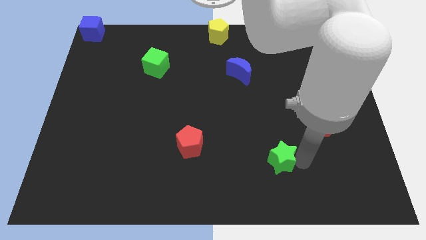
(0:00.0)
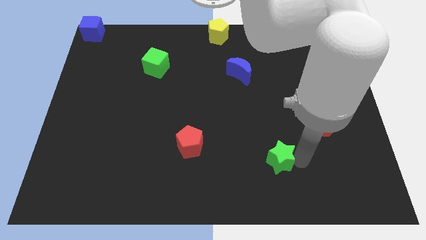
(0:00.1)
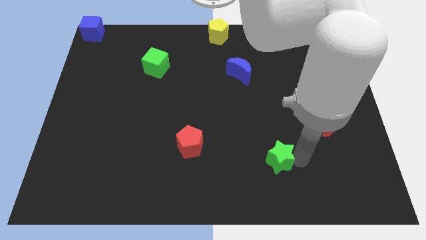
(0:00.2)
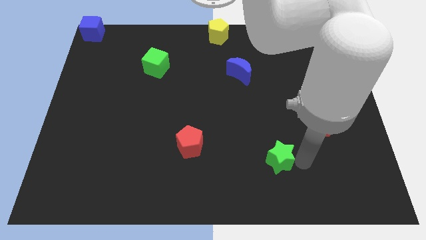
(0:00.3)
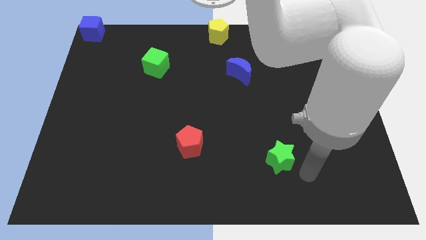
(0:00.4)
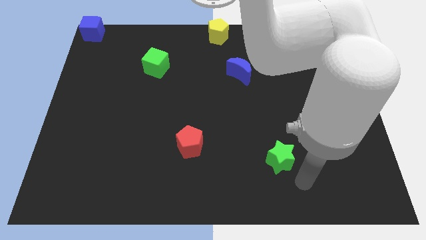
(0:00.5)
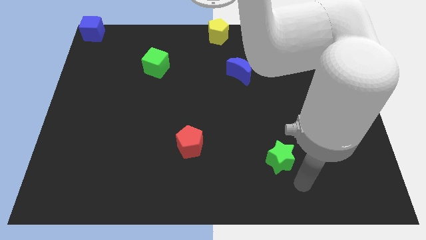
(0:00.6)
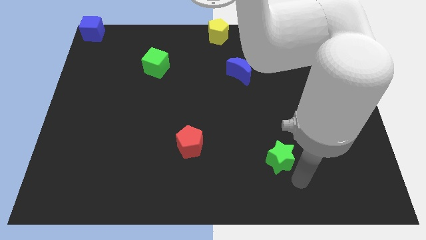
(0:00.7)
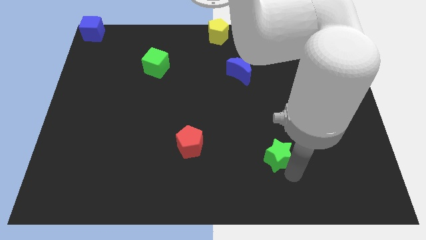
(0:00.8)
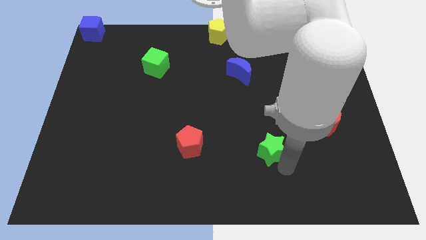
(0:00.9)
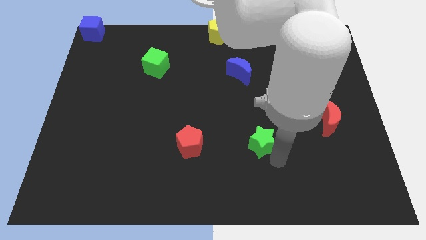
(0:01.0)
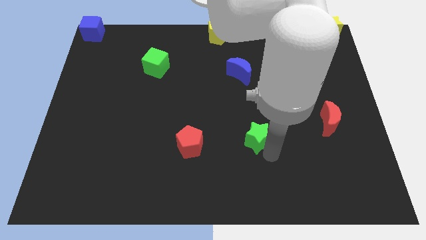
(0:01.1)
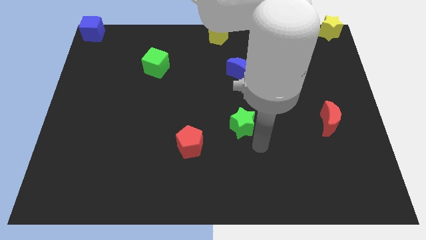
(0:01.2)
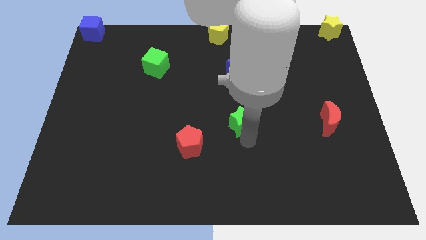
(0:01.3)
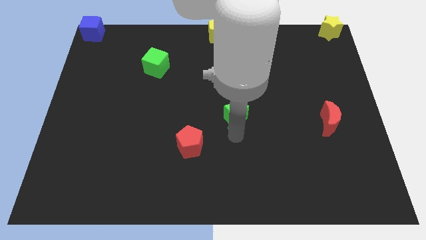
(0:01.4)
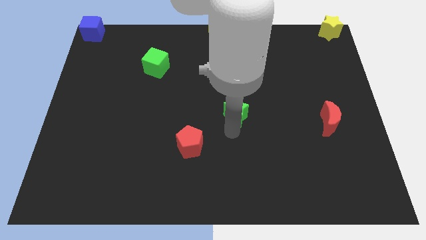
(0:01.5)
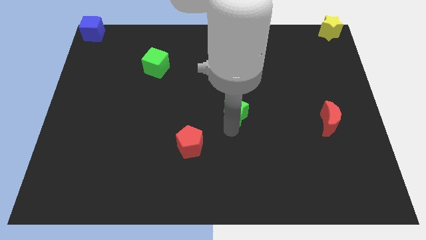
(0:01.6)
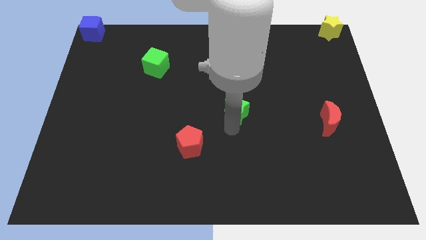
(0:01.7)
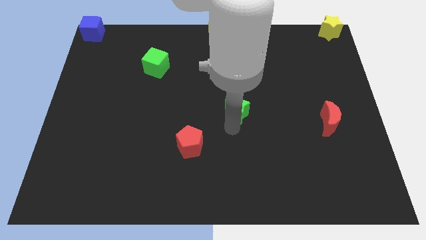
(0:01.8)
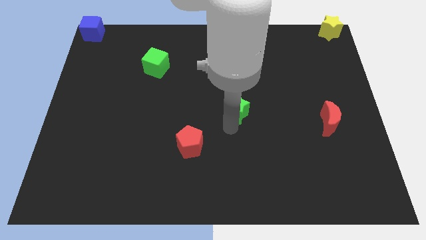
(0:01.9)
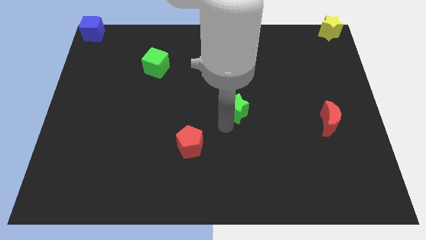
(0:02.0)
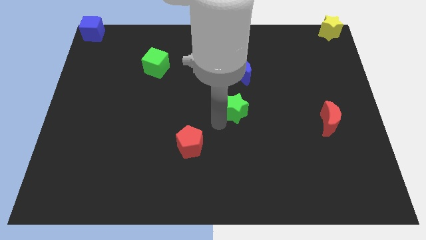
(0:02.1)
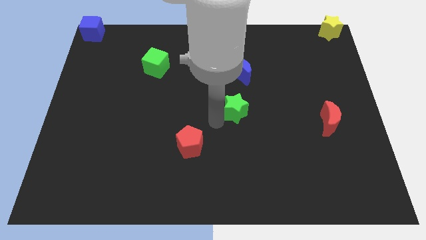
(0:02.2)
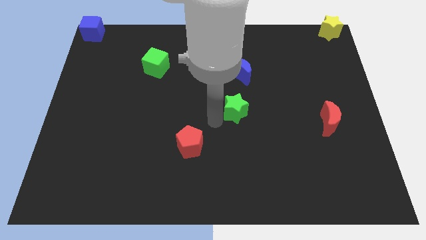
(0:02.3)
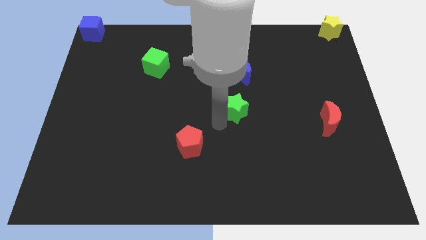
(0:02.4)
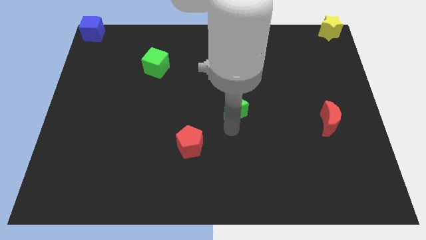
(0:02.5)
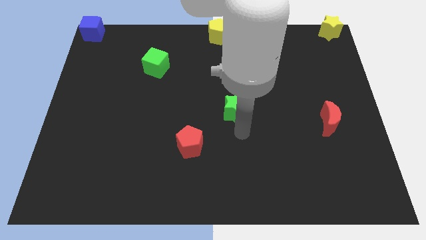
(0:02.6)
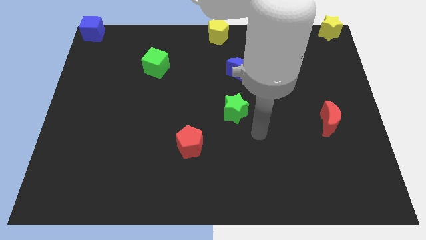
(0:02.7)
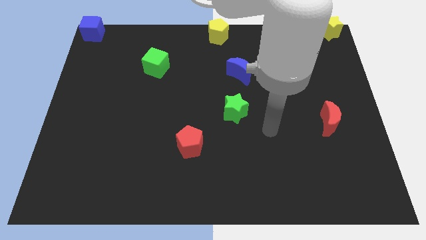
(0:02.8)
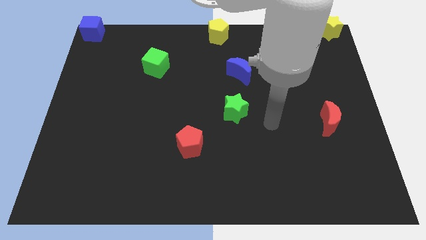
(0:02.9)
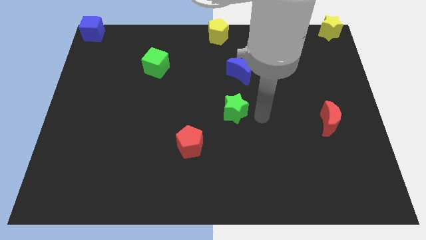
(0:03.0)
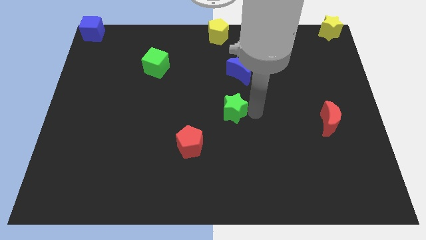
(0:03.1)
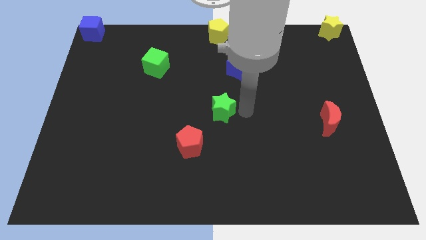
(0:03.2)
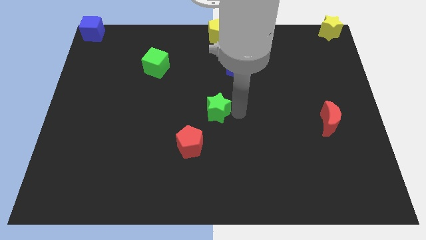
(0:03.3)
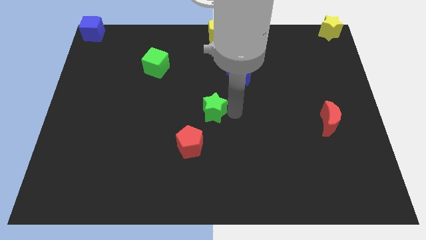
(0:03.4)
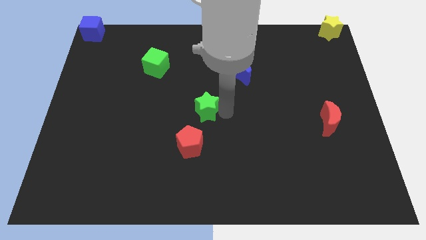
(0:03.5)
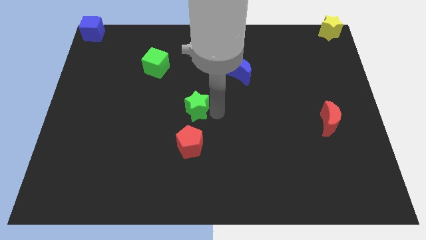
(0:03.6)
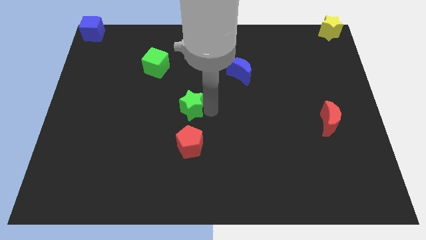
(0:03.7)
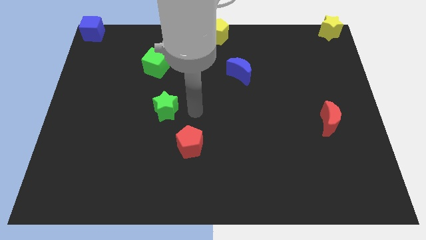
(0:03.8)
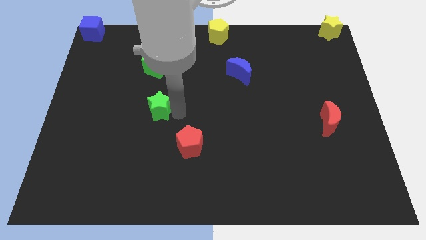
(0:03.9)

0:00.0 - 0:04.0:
place the green star above the red pentagon

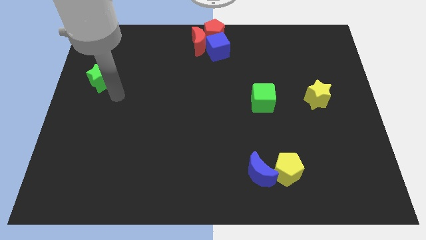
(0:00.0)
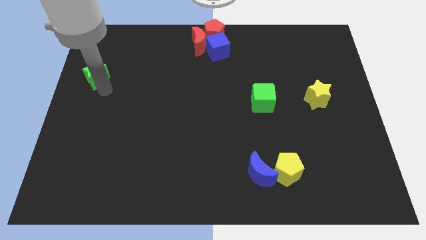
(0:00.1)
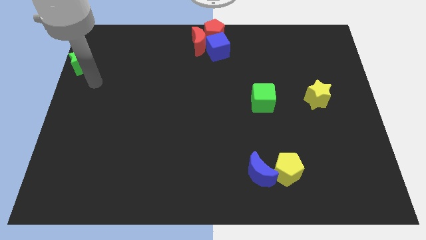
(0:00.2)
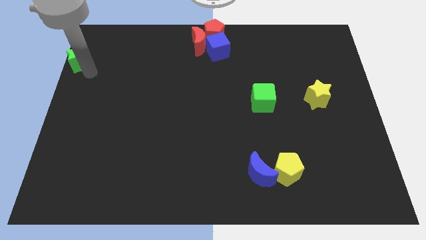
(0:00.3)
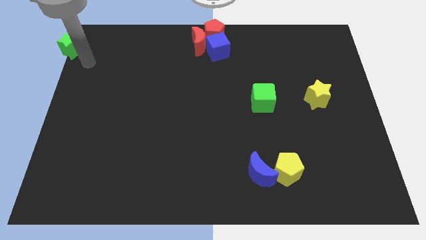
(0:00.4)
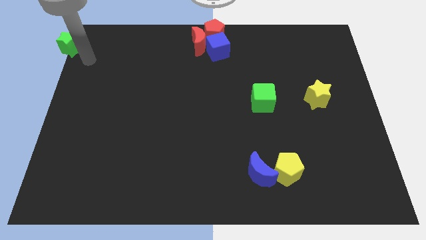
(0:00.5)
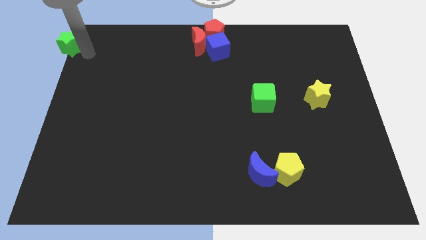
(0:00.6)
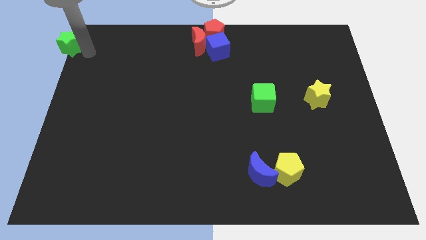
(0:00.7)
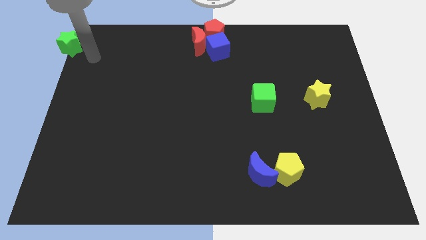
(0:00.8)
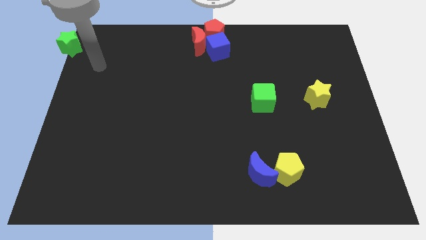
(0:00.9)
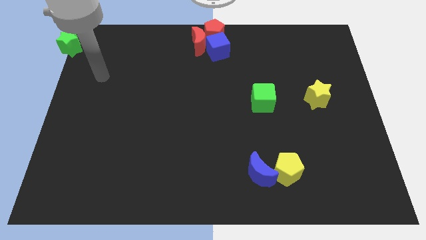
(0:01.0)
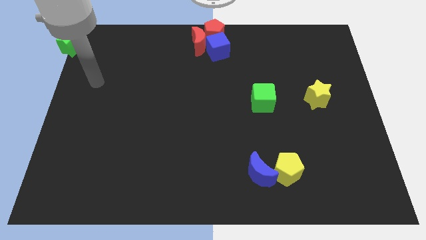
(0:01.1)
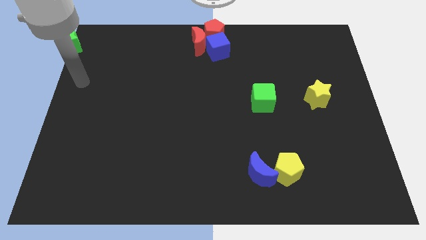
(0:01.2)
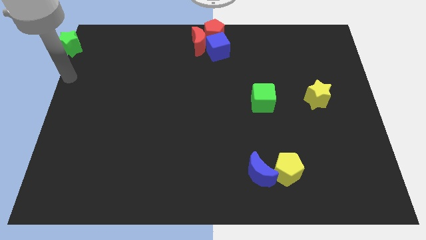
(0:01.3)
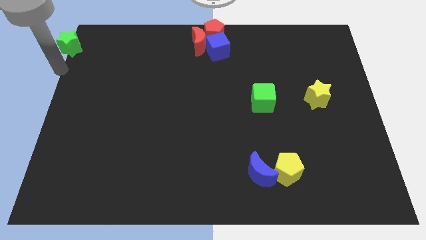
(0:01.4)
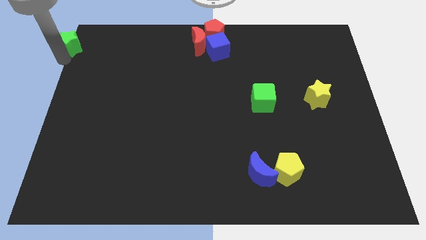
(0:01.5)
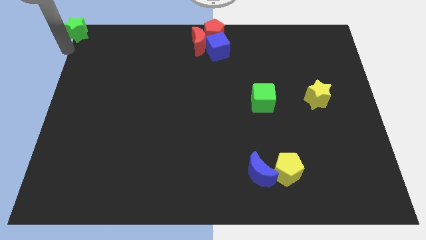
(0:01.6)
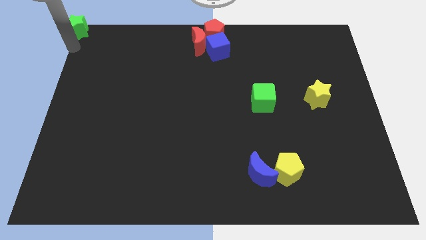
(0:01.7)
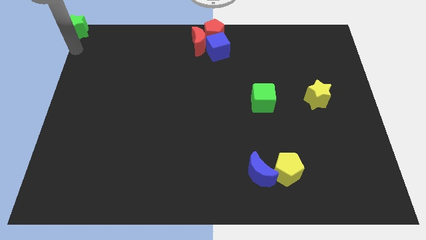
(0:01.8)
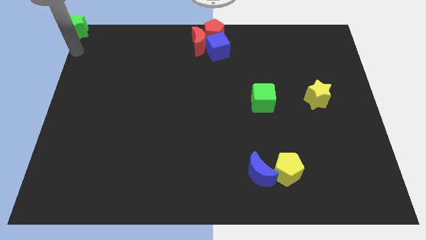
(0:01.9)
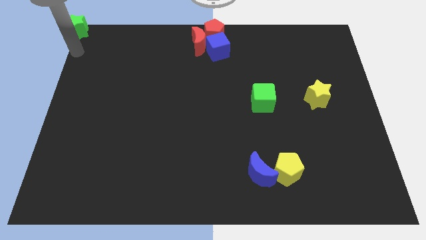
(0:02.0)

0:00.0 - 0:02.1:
slide the green star to the top left corner of the board

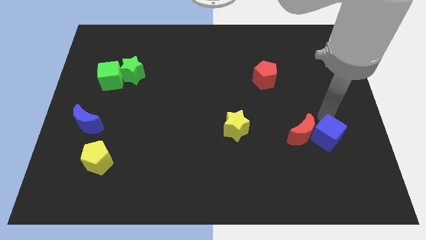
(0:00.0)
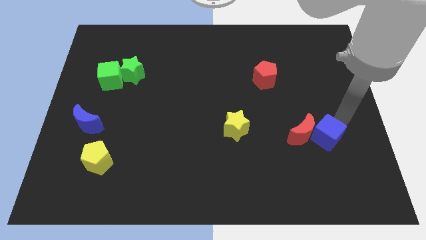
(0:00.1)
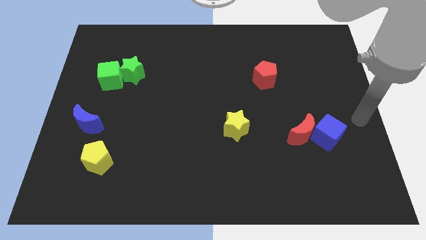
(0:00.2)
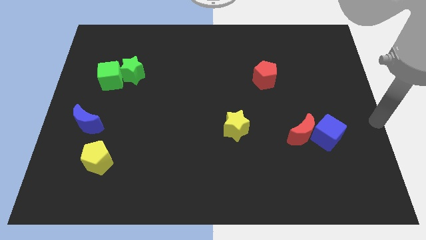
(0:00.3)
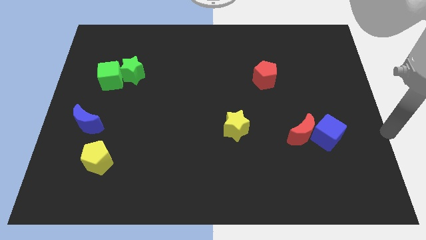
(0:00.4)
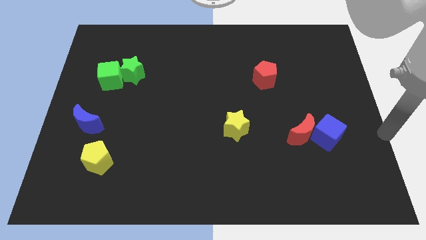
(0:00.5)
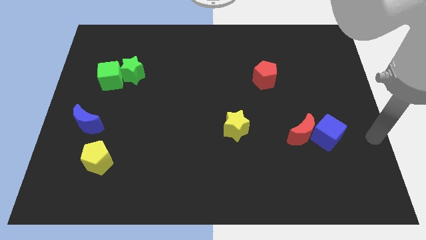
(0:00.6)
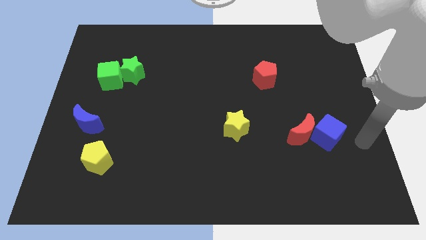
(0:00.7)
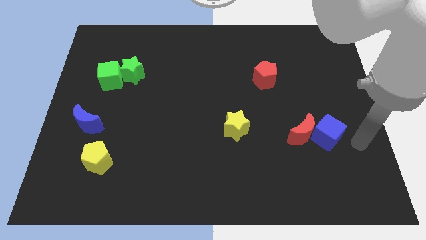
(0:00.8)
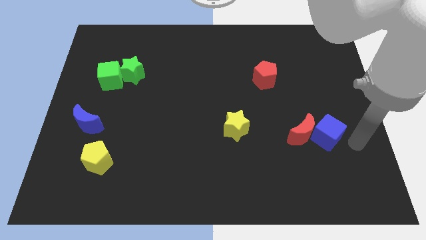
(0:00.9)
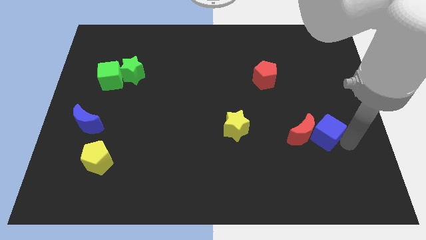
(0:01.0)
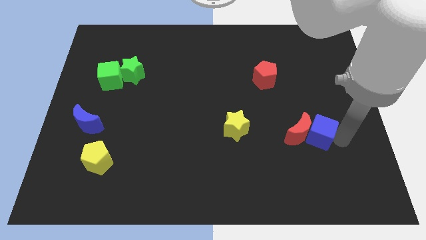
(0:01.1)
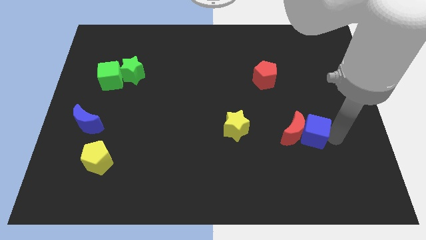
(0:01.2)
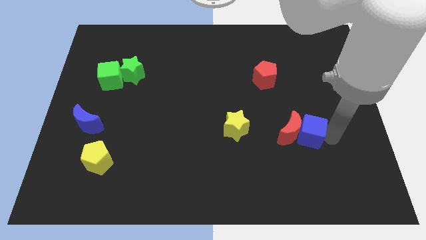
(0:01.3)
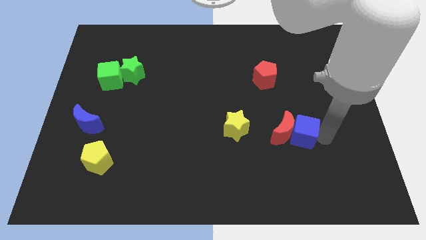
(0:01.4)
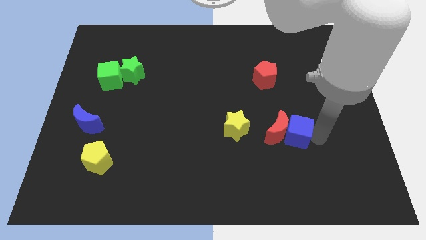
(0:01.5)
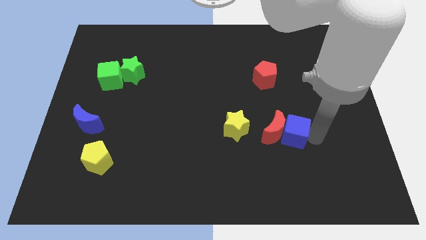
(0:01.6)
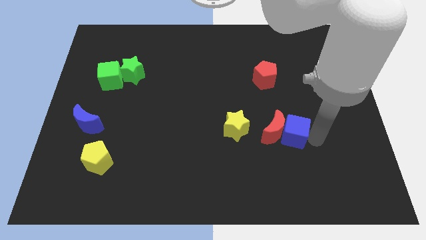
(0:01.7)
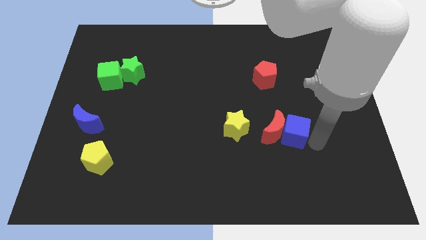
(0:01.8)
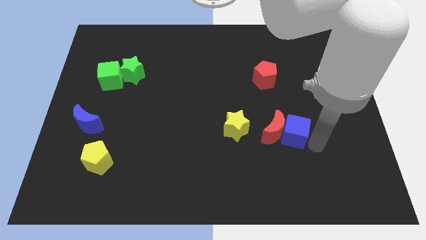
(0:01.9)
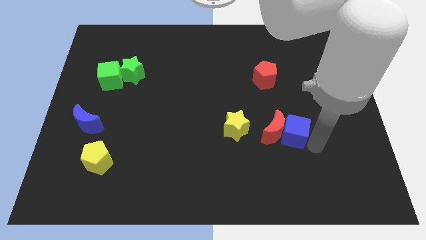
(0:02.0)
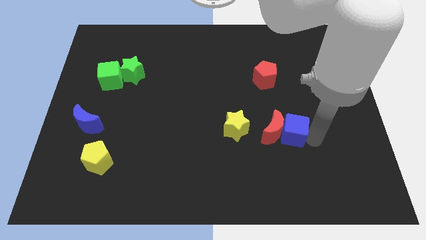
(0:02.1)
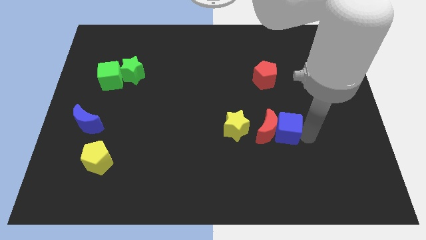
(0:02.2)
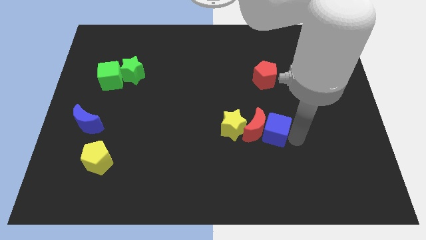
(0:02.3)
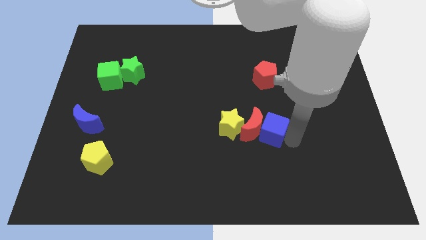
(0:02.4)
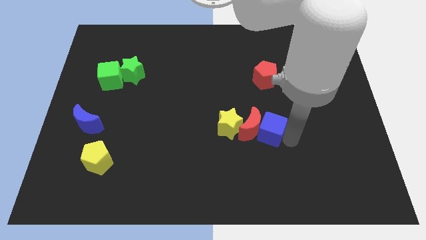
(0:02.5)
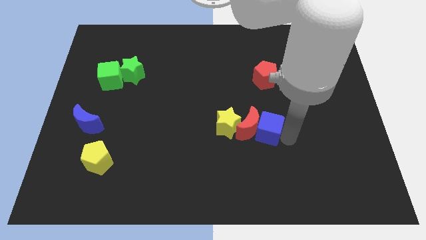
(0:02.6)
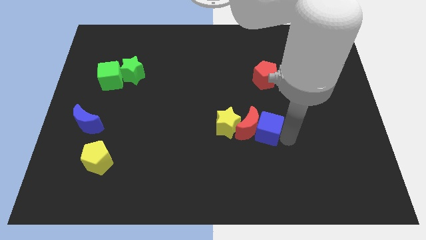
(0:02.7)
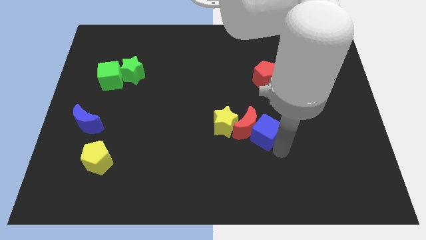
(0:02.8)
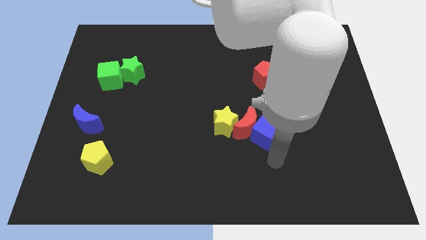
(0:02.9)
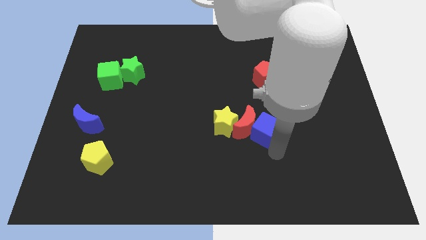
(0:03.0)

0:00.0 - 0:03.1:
push the blue cube along with the red crescent into the yellow star
